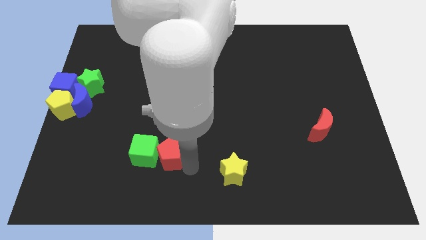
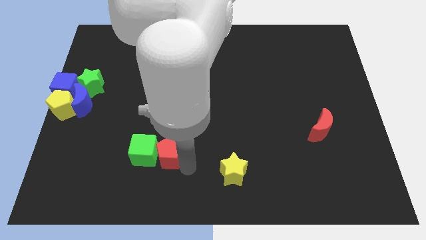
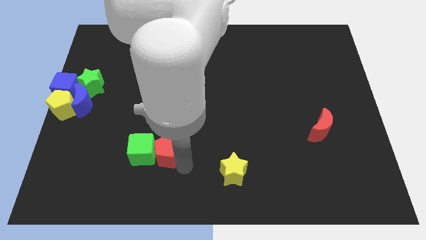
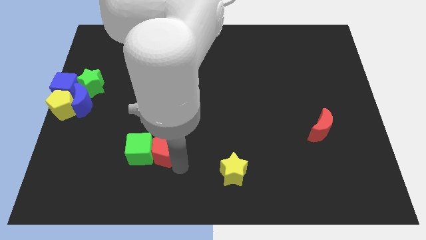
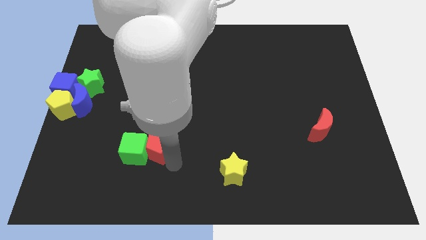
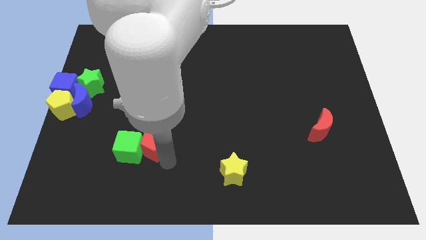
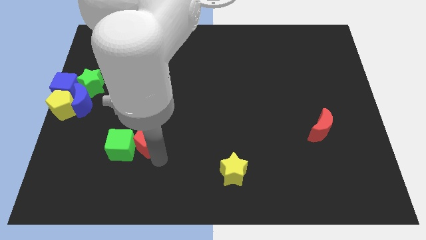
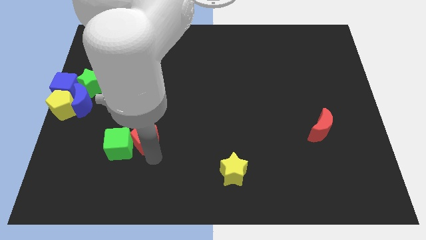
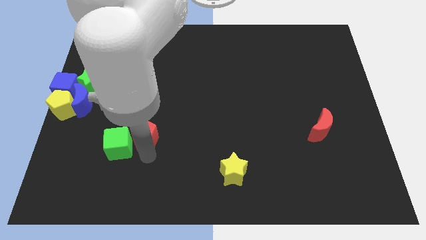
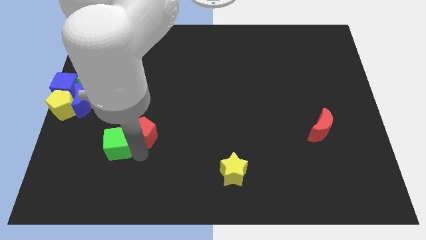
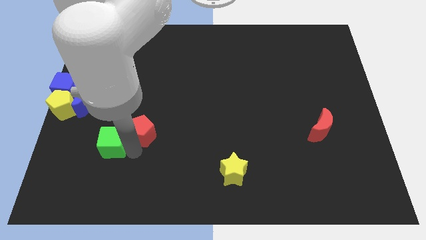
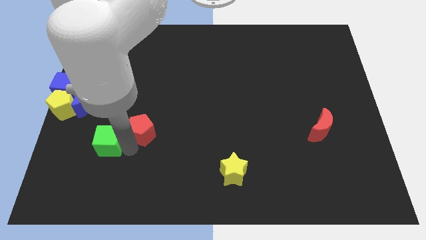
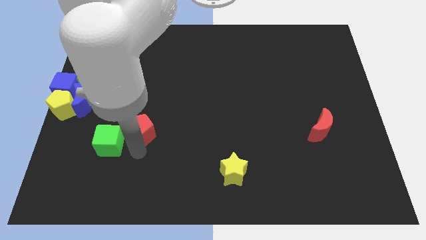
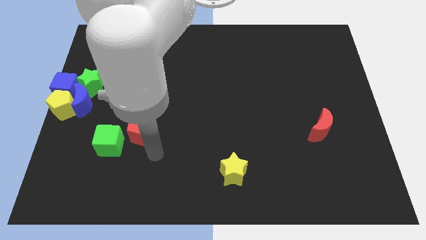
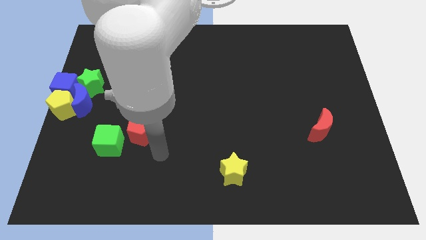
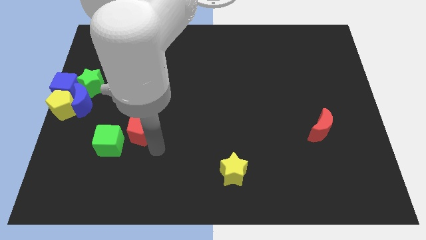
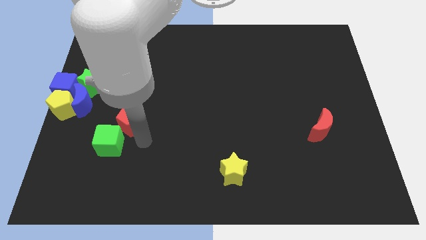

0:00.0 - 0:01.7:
separate the red pentagon and the green cube

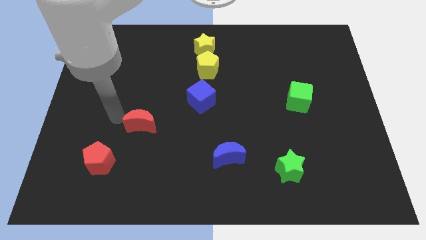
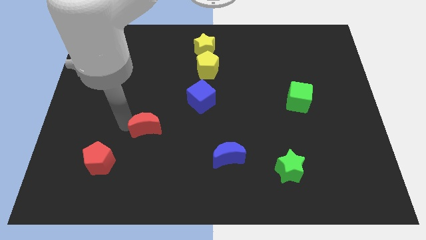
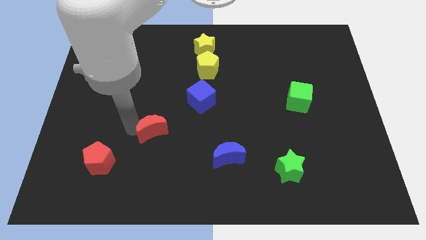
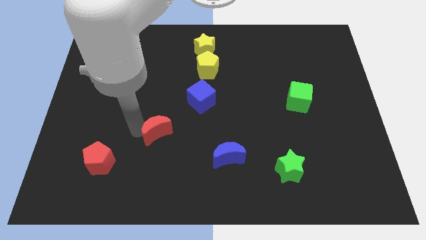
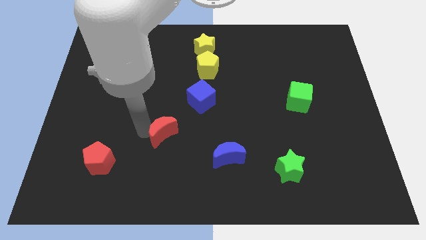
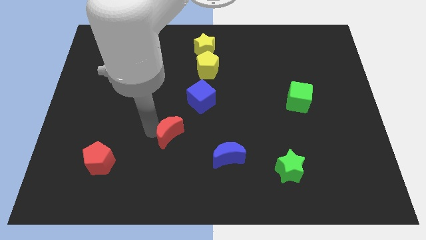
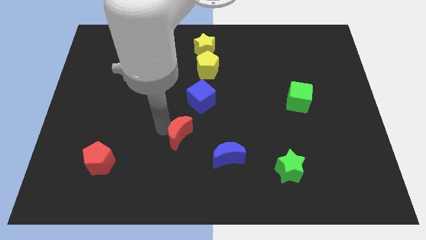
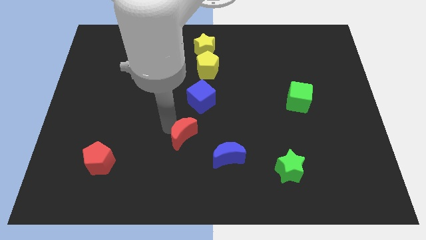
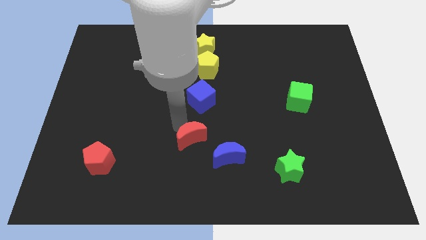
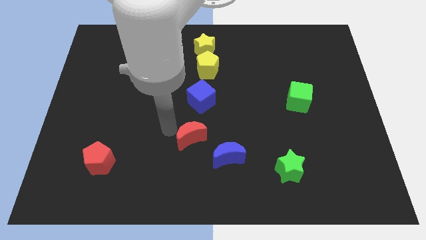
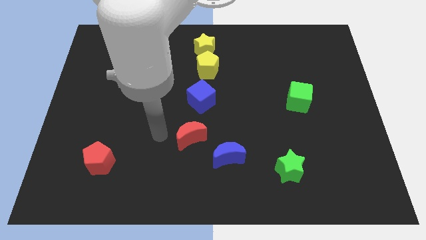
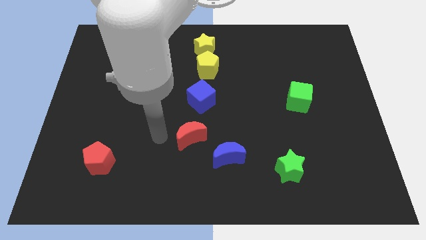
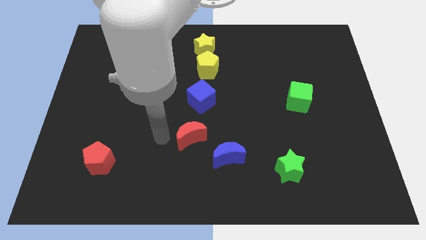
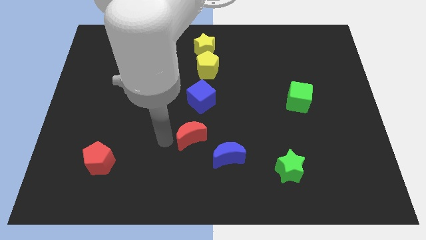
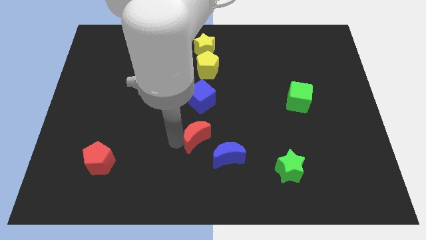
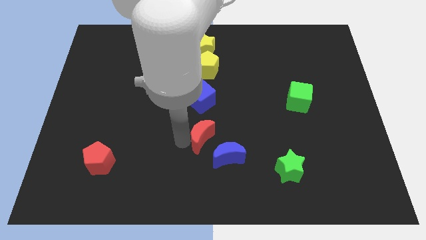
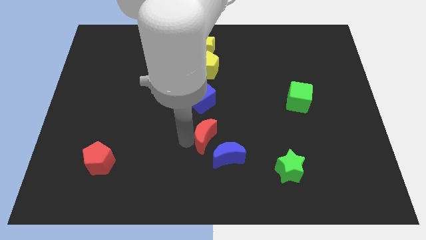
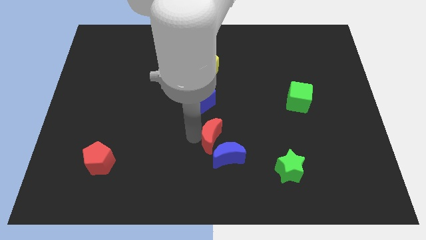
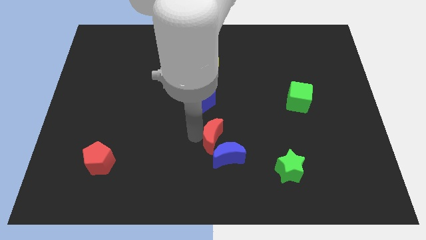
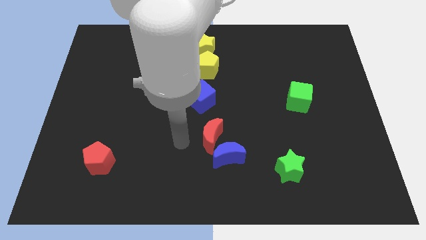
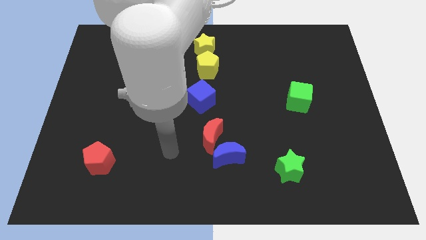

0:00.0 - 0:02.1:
move the red crescent on top of the blue crescent

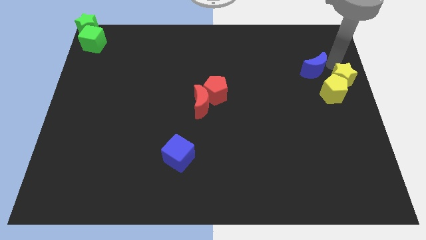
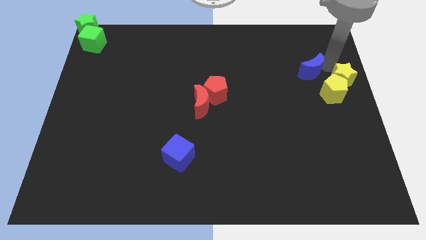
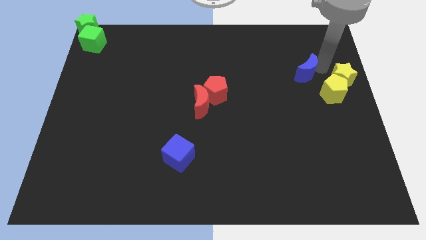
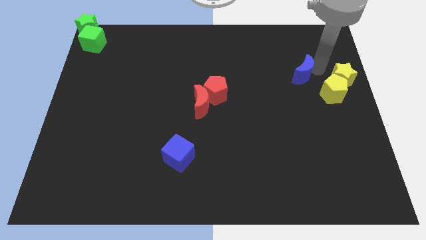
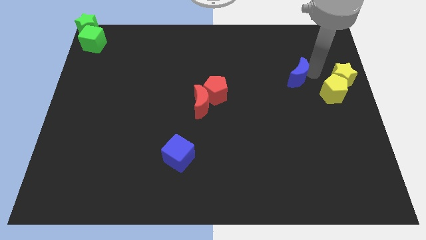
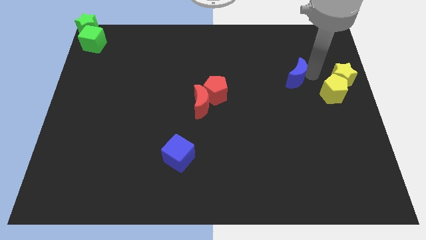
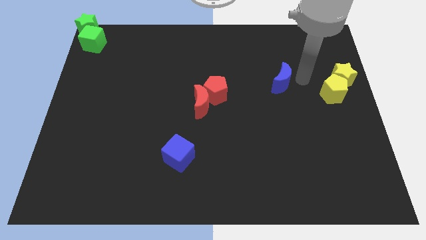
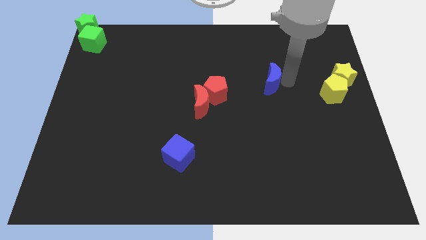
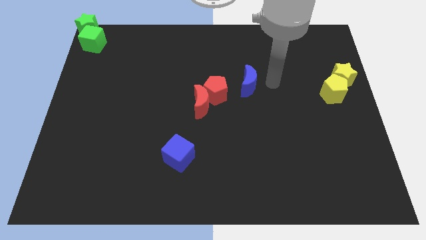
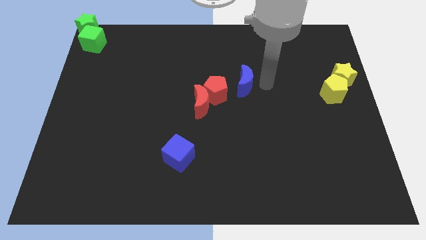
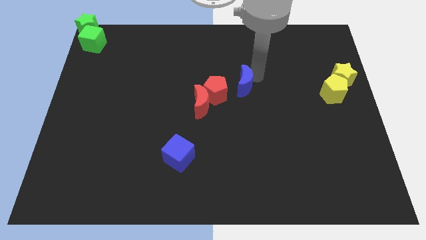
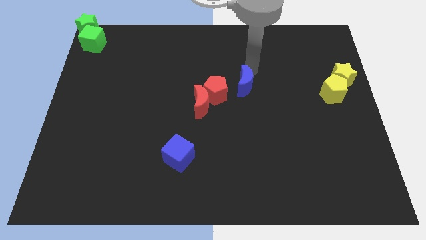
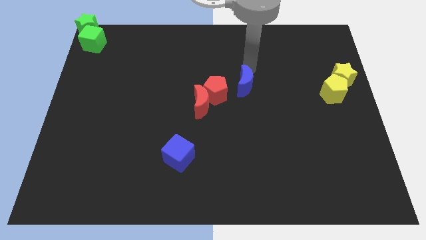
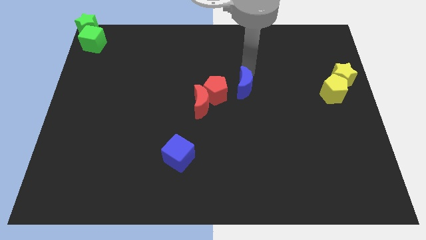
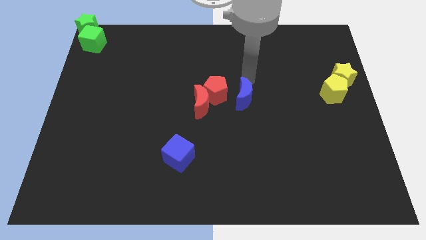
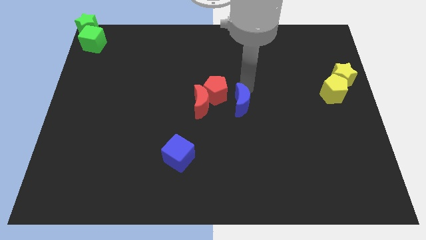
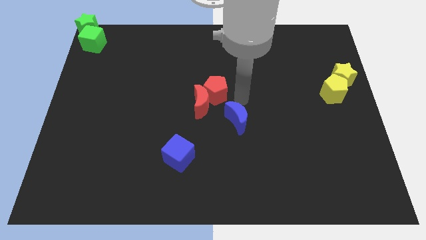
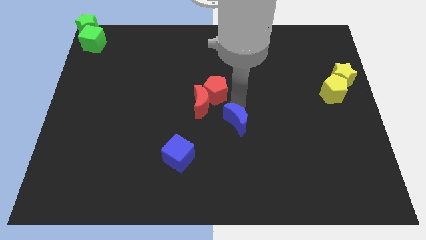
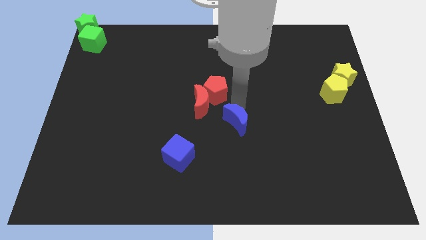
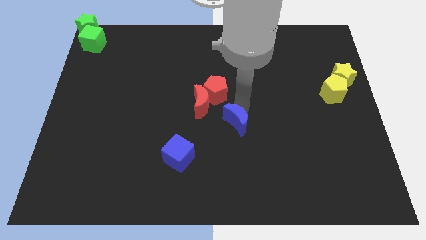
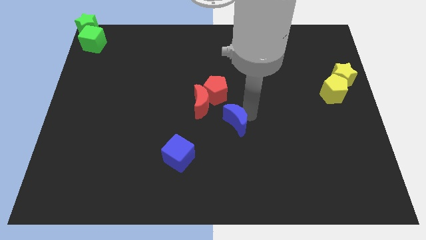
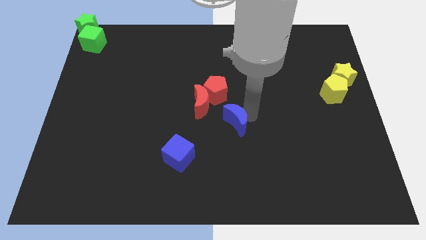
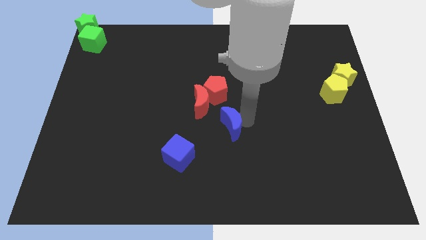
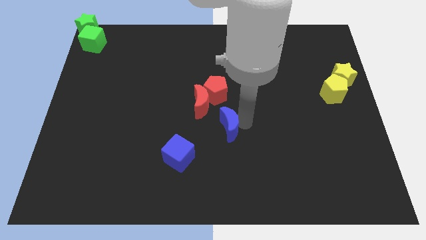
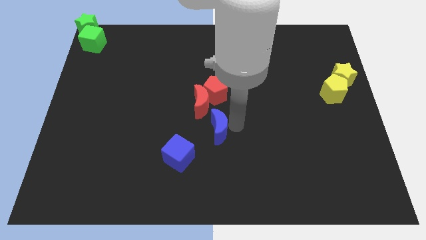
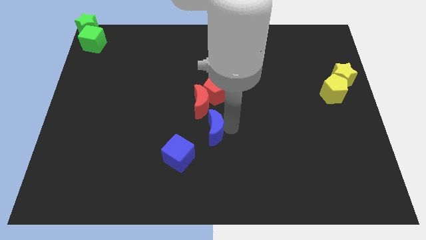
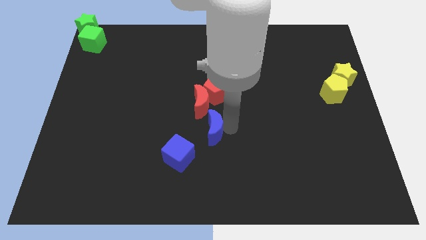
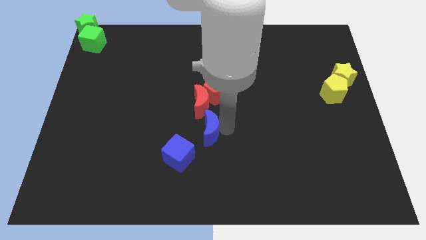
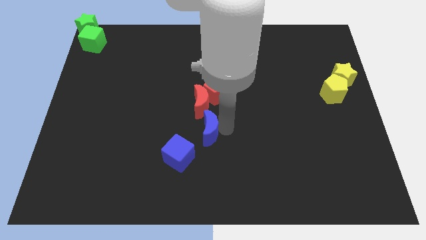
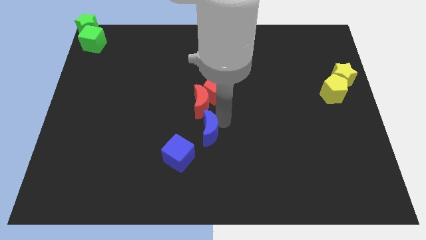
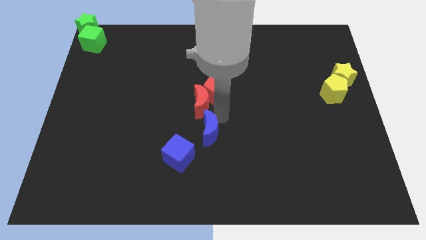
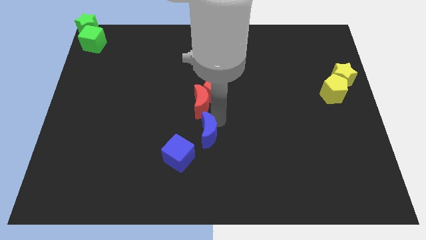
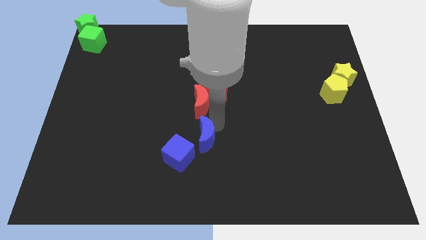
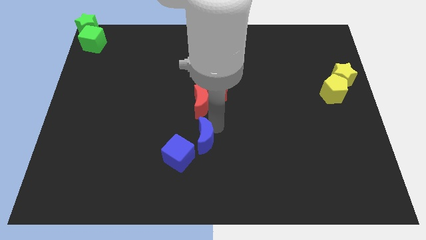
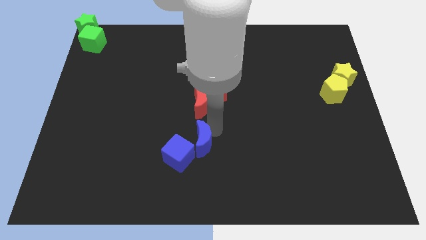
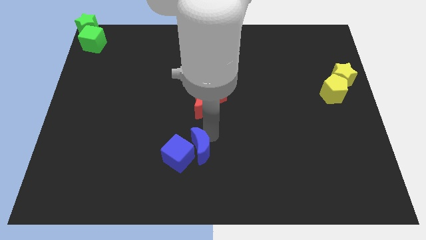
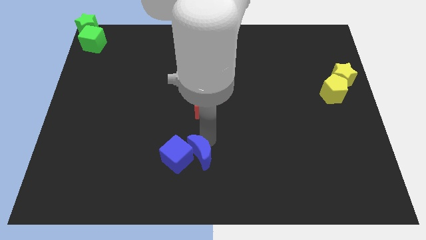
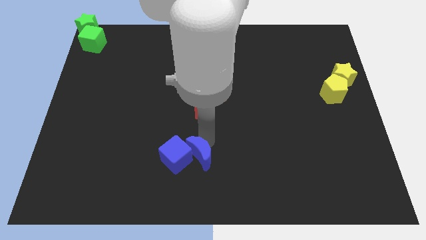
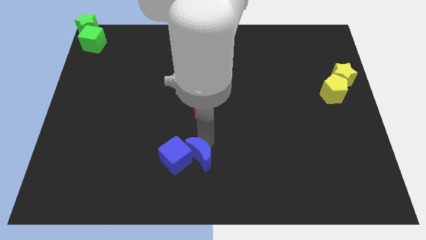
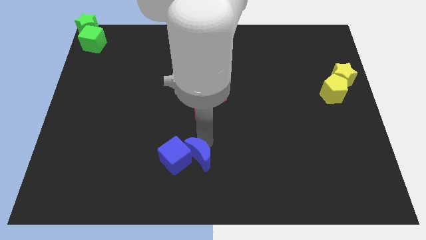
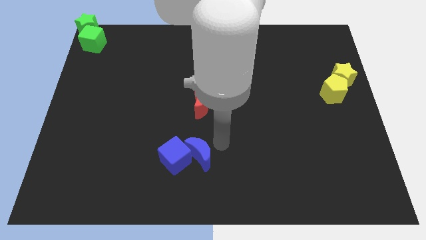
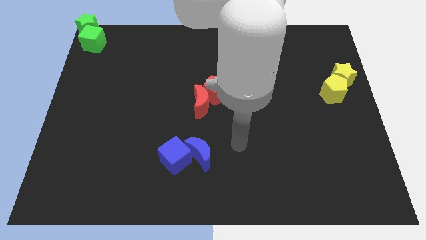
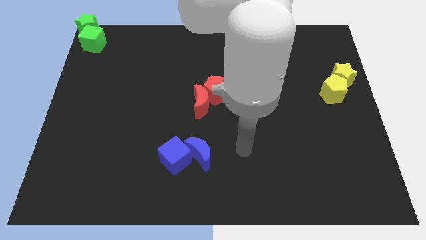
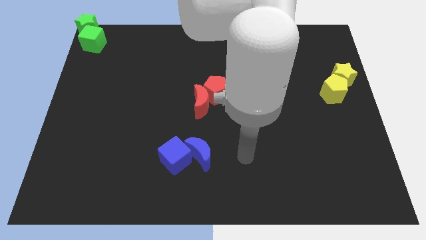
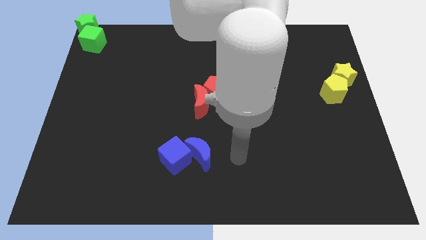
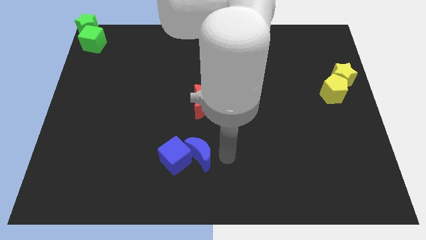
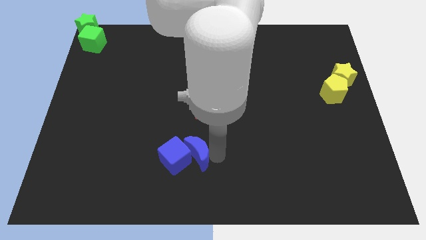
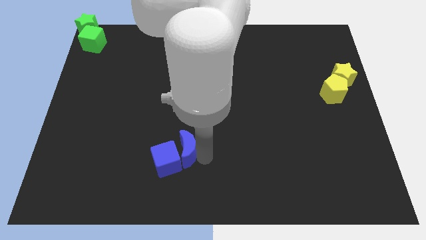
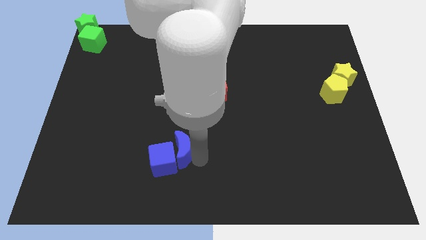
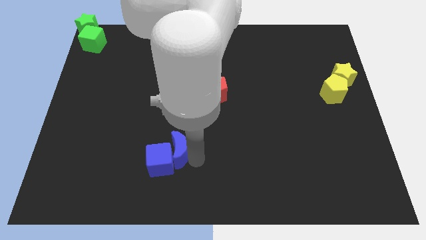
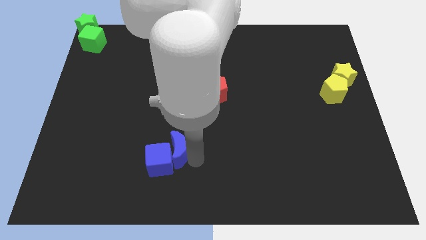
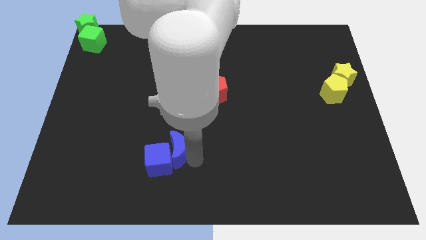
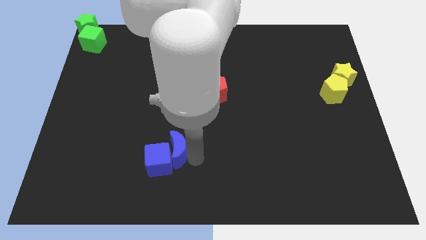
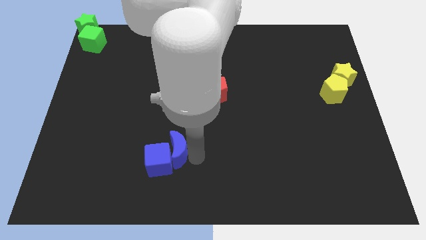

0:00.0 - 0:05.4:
move the blue crescent to the right side of the blue cube
